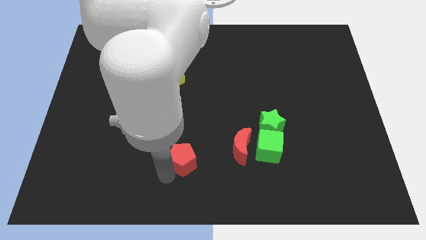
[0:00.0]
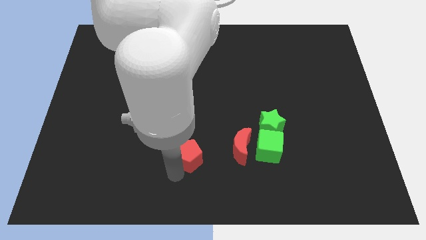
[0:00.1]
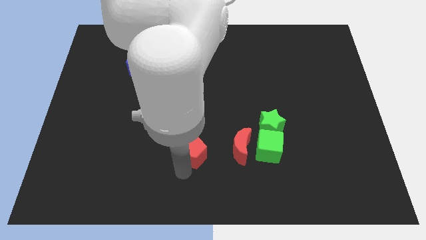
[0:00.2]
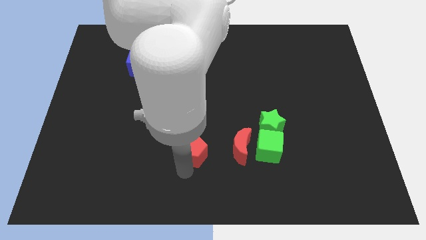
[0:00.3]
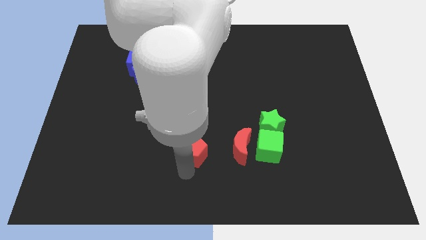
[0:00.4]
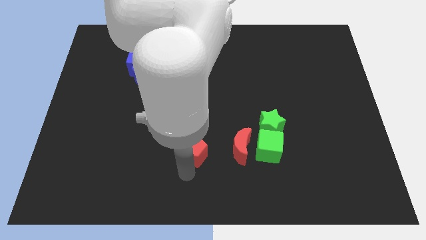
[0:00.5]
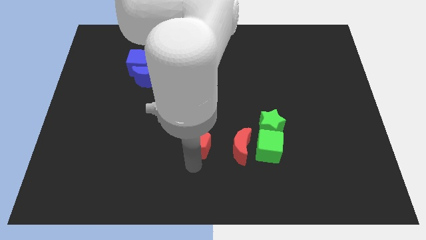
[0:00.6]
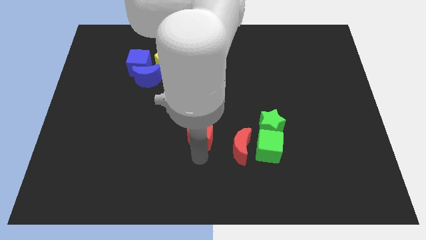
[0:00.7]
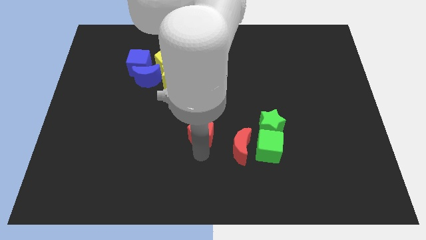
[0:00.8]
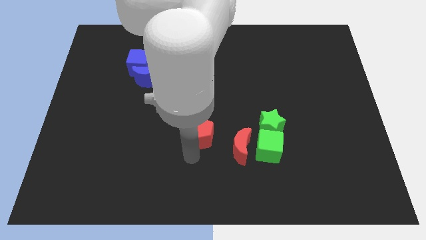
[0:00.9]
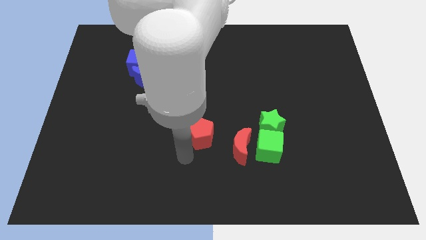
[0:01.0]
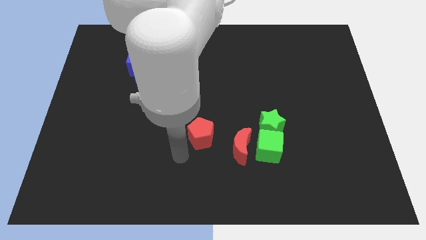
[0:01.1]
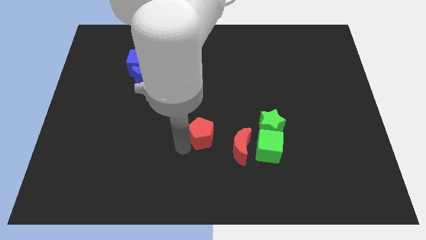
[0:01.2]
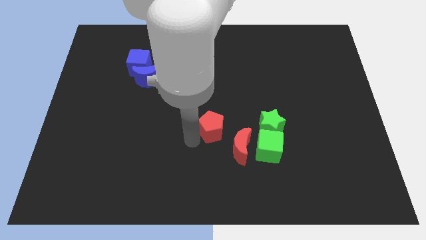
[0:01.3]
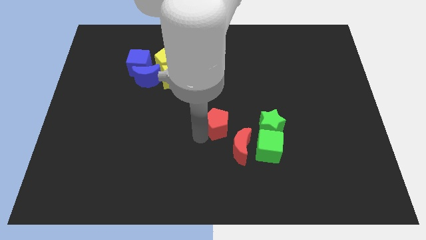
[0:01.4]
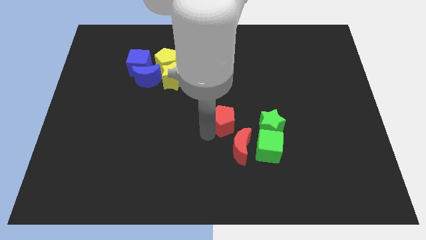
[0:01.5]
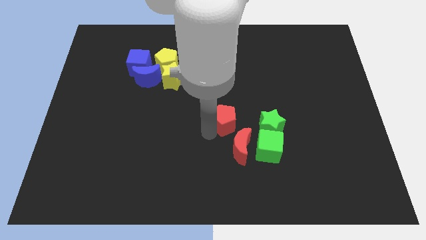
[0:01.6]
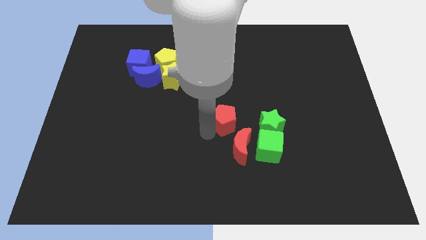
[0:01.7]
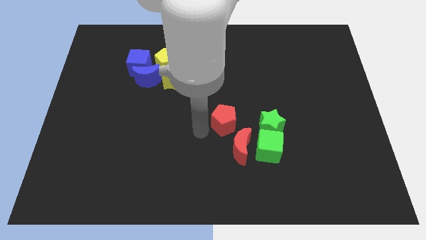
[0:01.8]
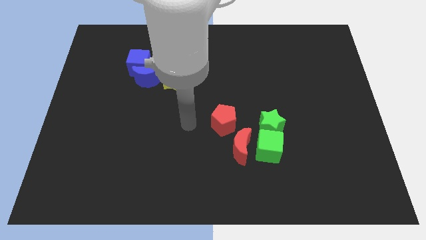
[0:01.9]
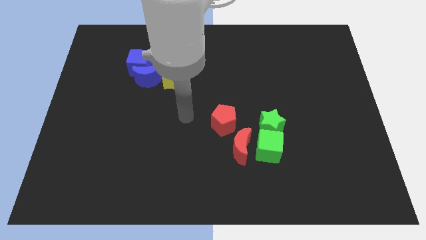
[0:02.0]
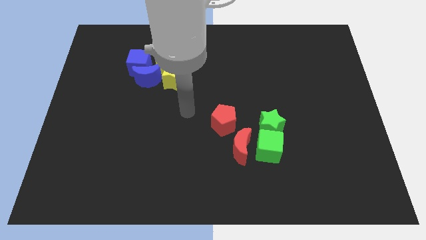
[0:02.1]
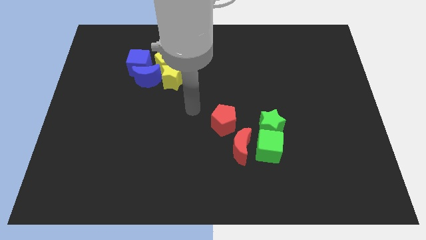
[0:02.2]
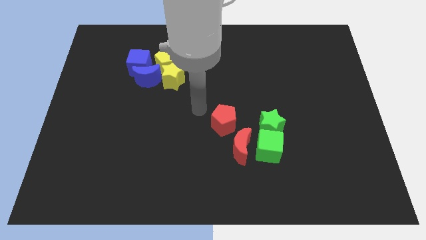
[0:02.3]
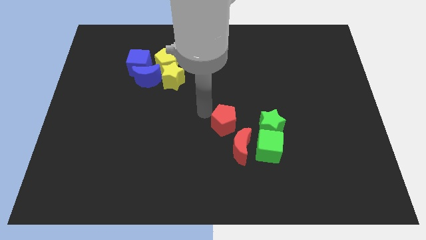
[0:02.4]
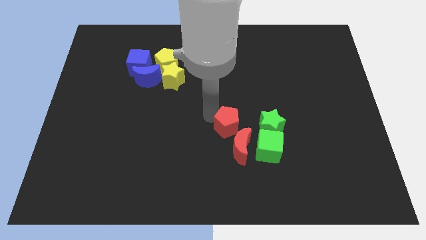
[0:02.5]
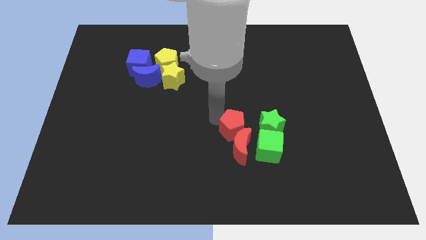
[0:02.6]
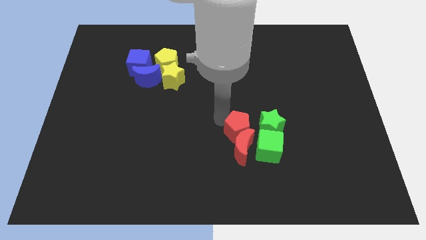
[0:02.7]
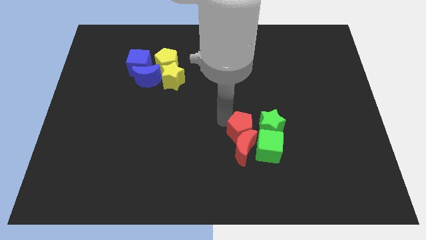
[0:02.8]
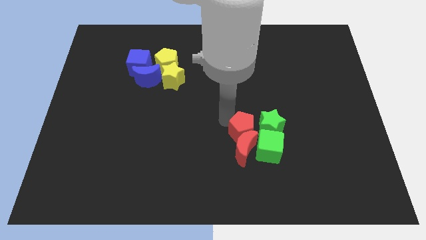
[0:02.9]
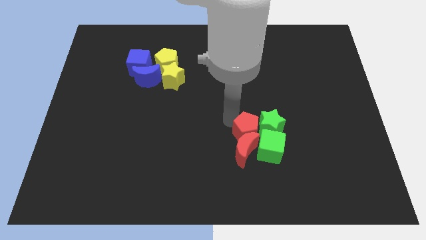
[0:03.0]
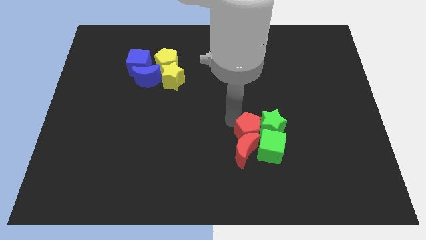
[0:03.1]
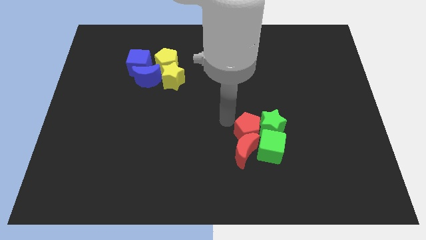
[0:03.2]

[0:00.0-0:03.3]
add the red pentagon to the group of green blocks and red crescent

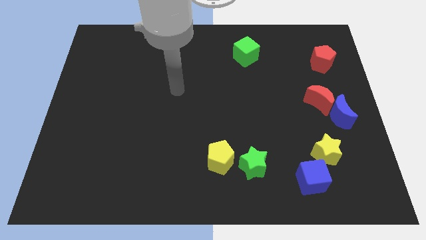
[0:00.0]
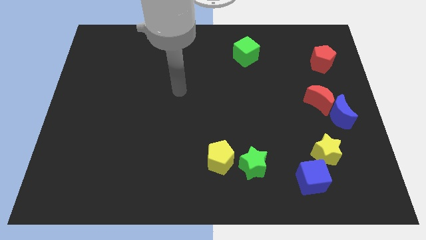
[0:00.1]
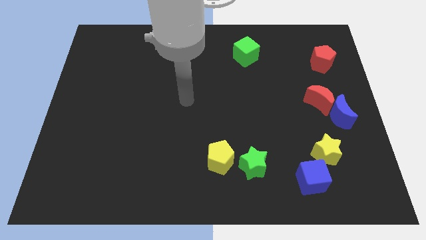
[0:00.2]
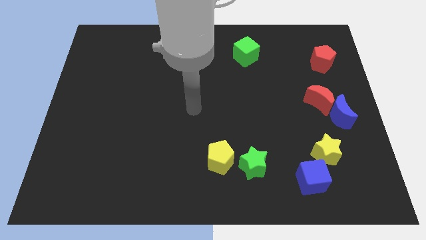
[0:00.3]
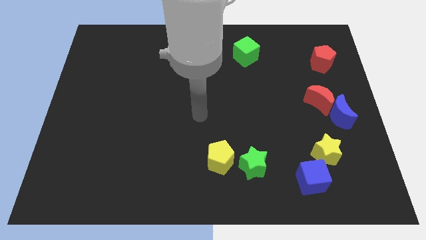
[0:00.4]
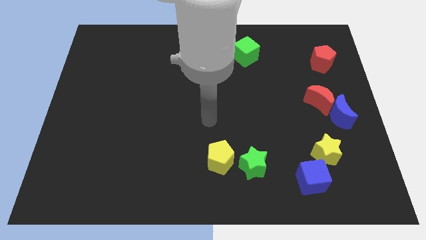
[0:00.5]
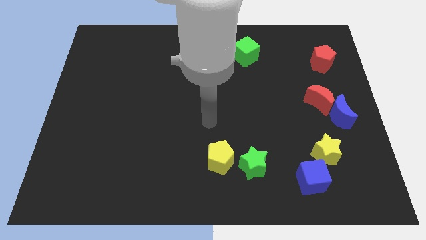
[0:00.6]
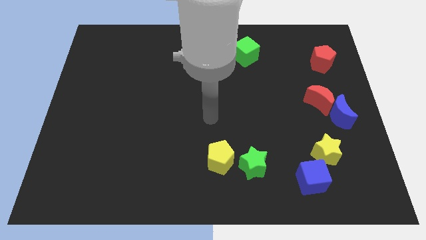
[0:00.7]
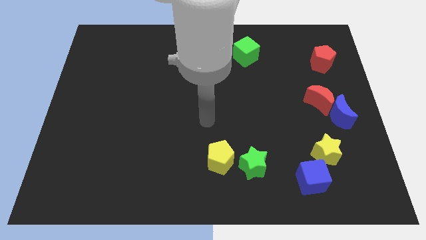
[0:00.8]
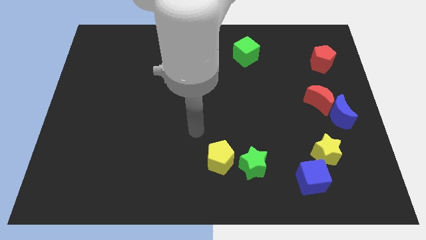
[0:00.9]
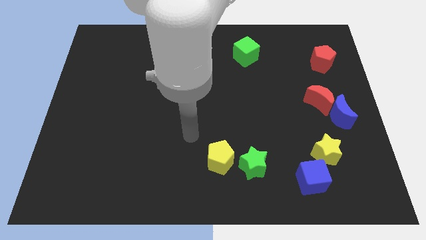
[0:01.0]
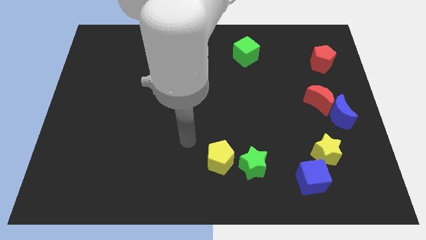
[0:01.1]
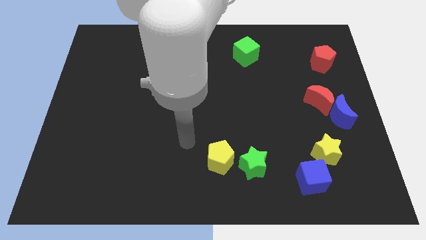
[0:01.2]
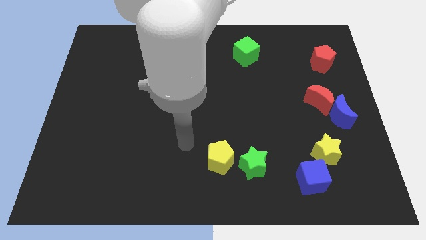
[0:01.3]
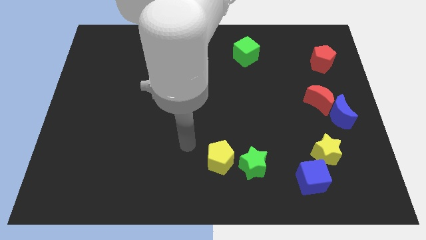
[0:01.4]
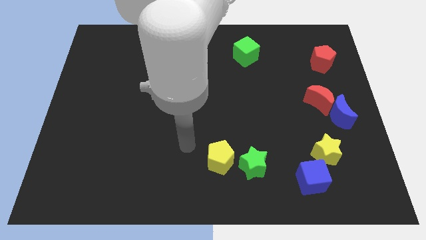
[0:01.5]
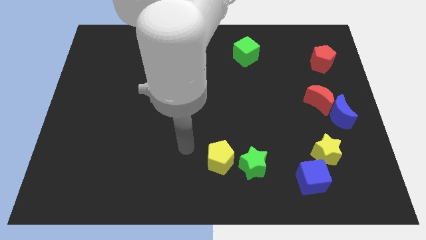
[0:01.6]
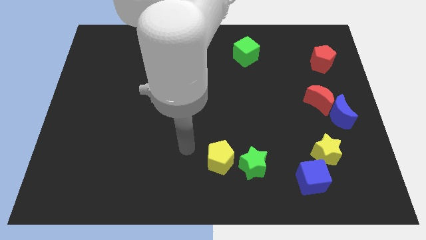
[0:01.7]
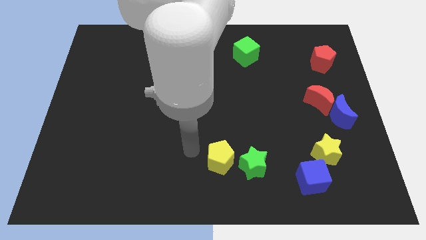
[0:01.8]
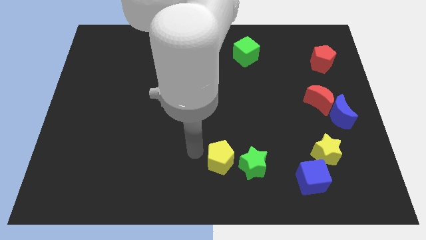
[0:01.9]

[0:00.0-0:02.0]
point the arm to the left of the yellow pentagon

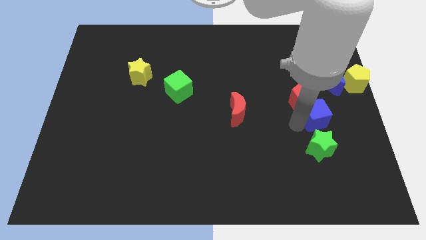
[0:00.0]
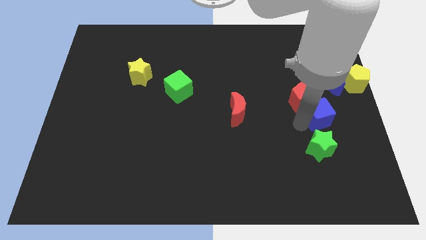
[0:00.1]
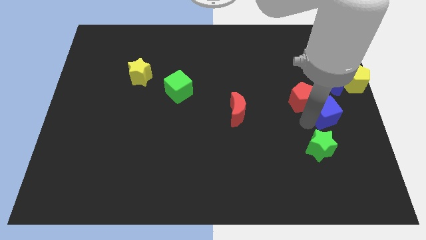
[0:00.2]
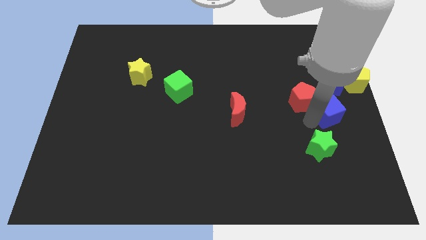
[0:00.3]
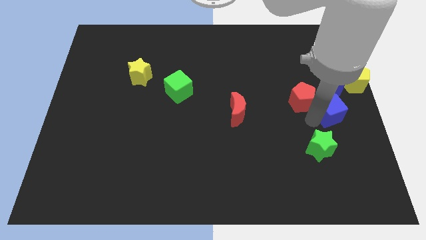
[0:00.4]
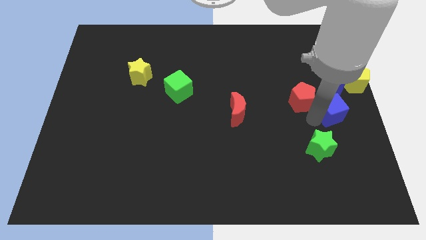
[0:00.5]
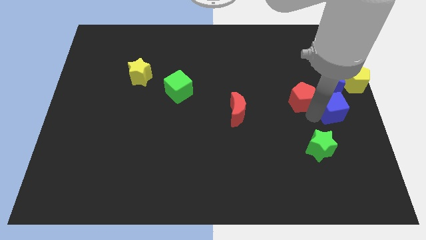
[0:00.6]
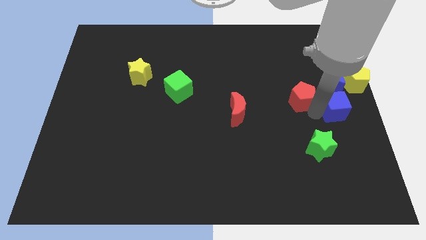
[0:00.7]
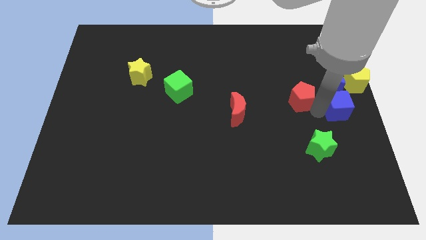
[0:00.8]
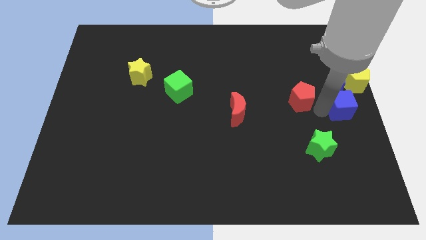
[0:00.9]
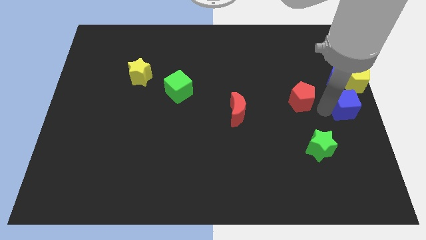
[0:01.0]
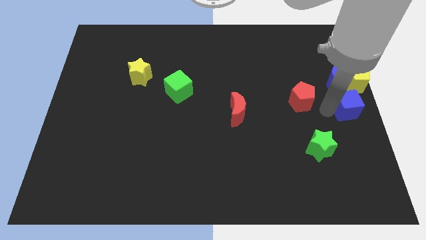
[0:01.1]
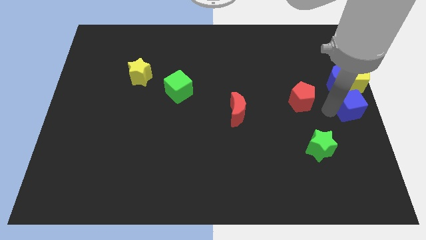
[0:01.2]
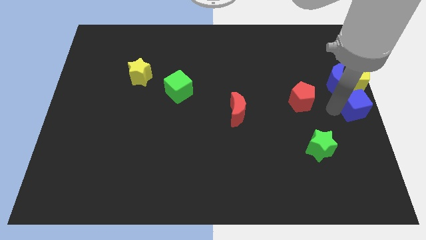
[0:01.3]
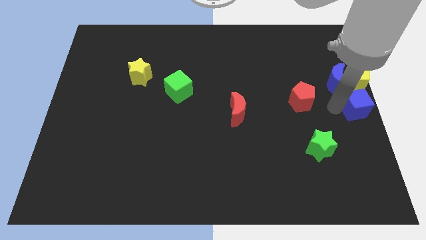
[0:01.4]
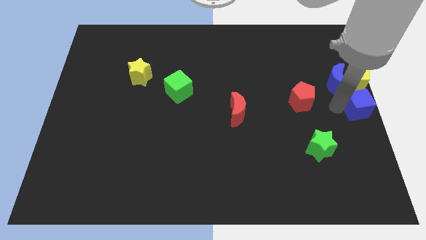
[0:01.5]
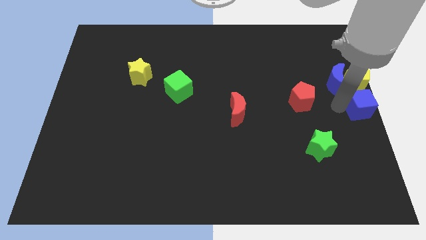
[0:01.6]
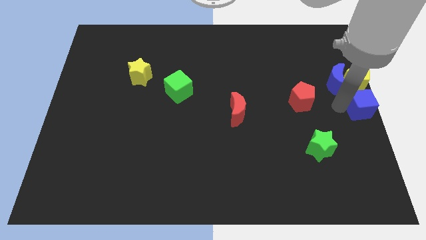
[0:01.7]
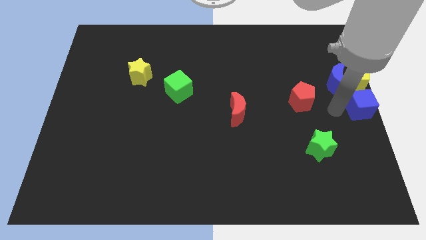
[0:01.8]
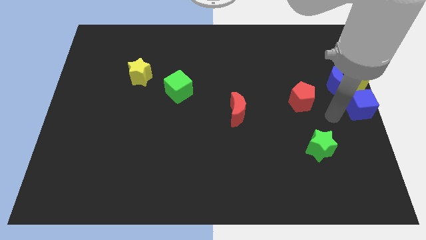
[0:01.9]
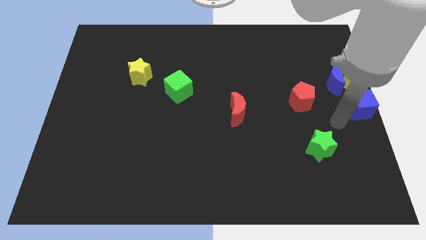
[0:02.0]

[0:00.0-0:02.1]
place the blue cube below the yellow pentagon

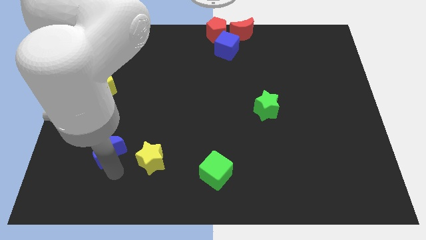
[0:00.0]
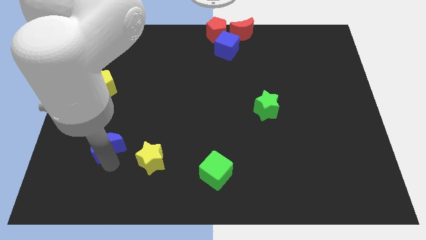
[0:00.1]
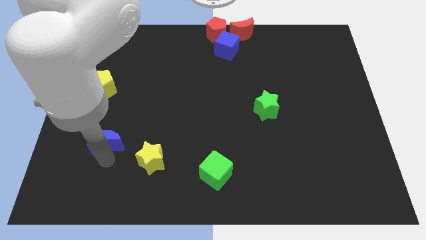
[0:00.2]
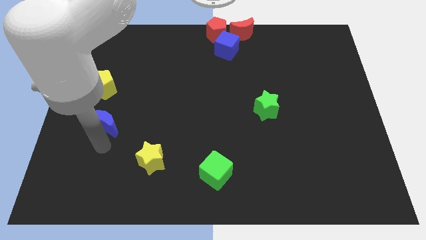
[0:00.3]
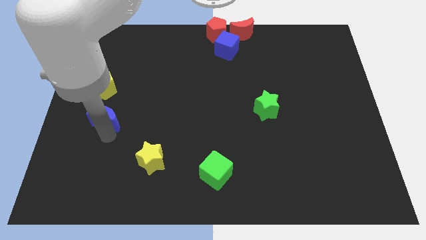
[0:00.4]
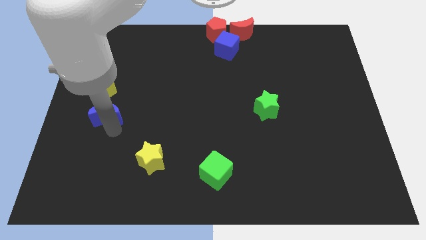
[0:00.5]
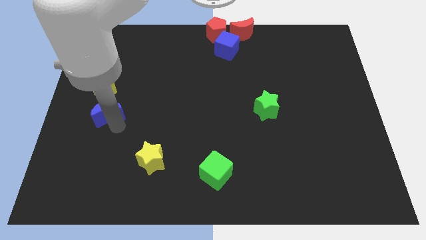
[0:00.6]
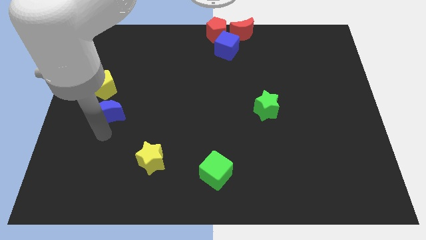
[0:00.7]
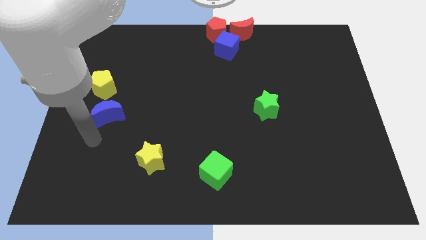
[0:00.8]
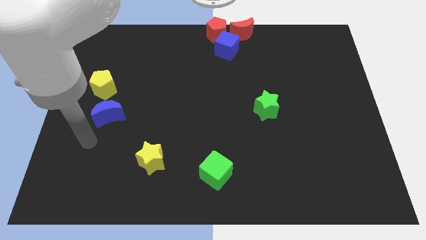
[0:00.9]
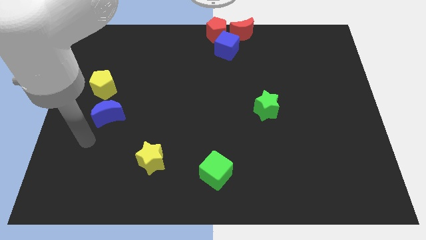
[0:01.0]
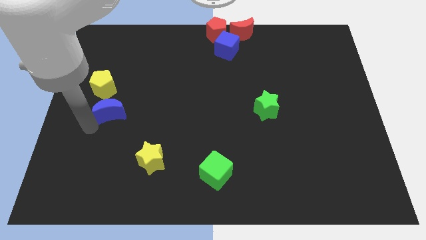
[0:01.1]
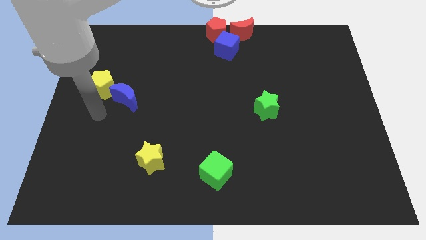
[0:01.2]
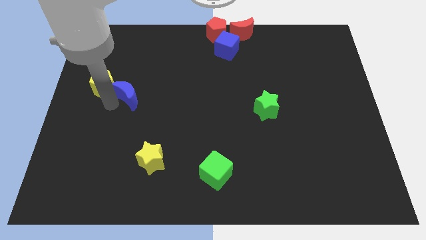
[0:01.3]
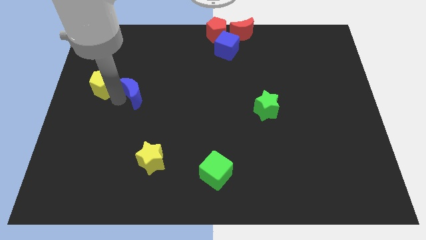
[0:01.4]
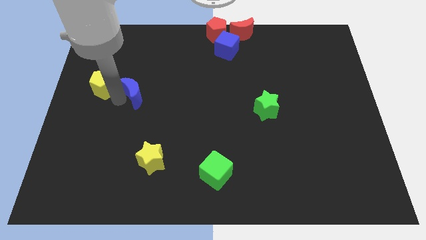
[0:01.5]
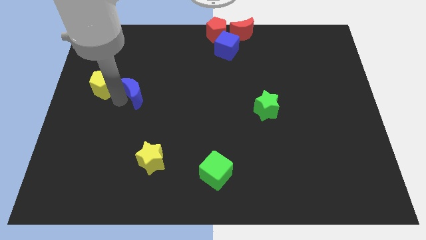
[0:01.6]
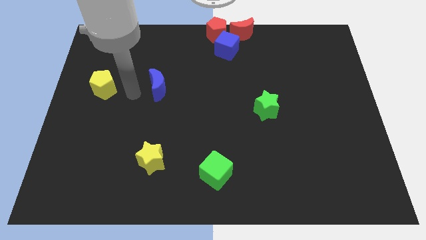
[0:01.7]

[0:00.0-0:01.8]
move the blue moon to the right side of the yellow pentagon
